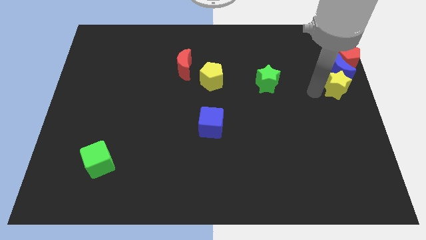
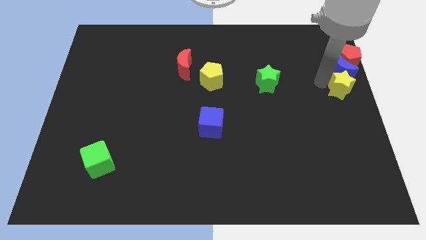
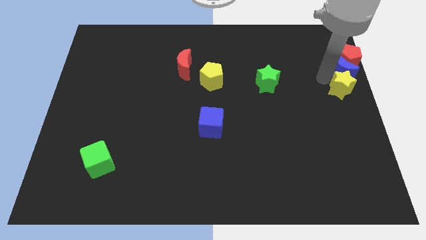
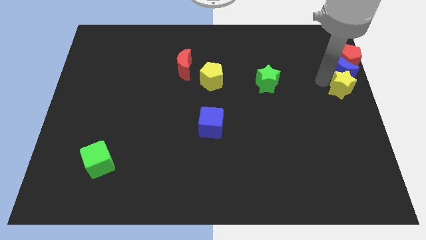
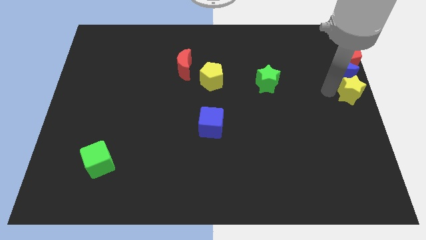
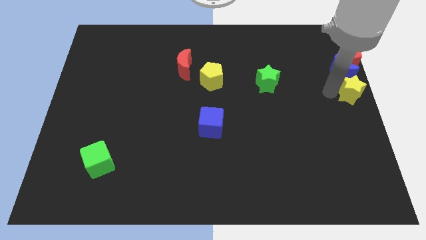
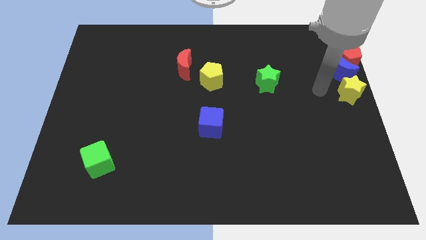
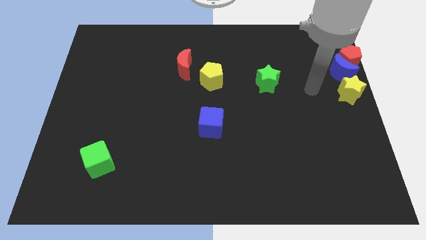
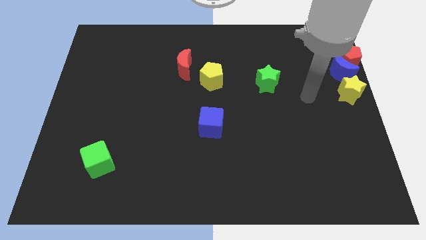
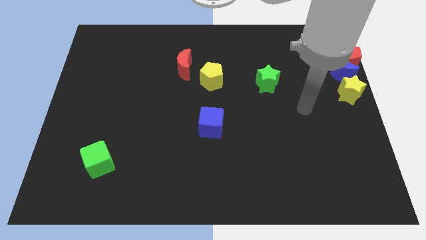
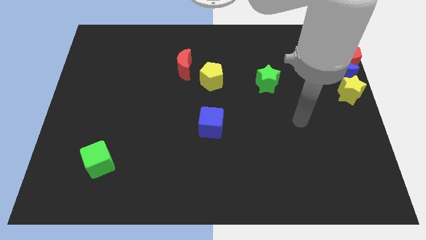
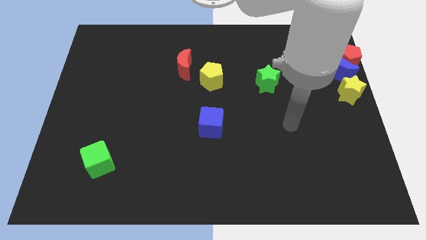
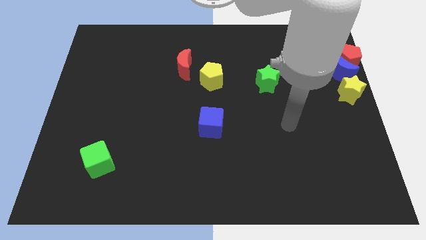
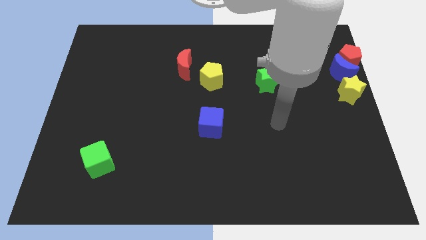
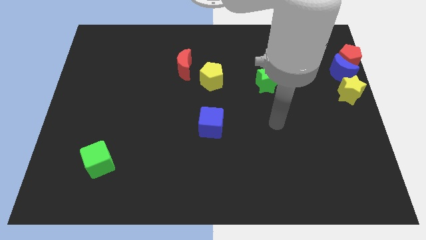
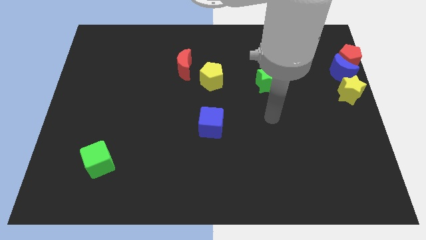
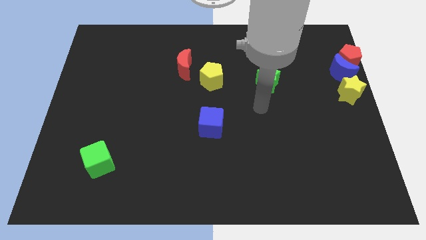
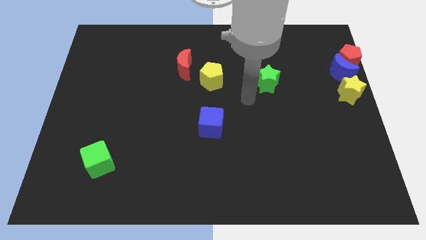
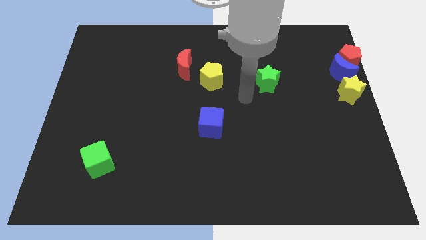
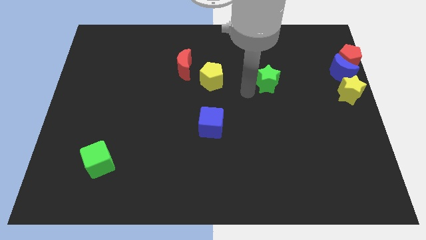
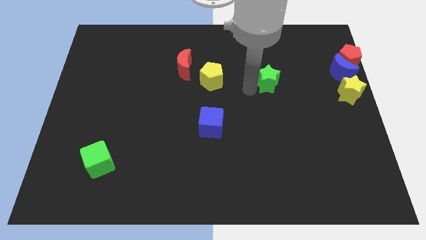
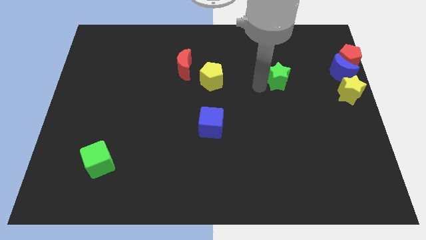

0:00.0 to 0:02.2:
move the arm towards the center side

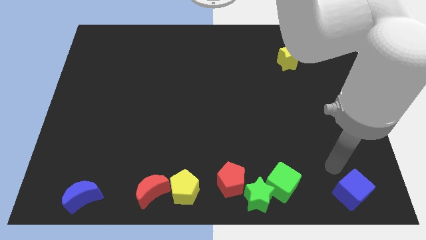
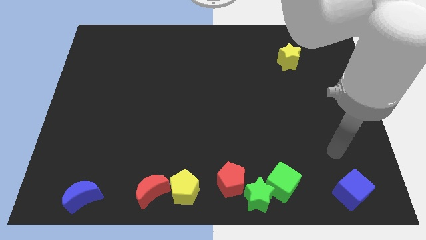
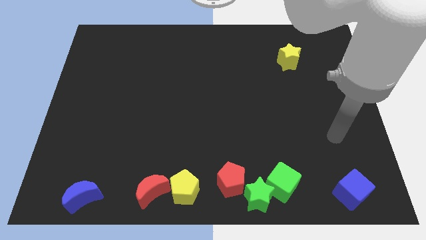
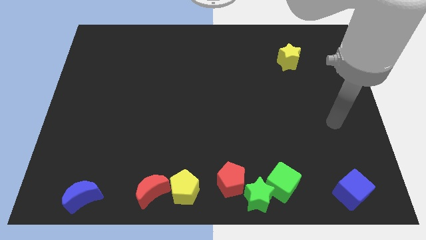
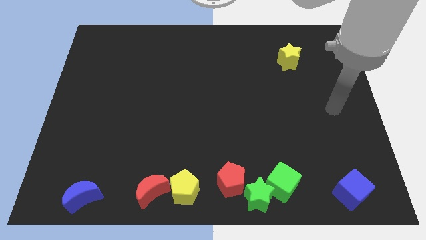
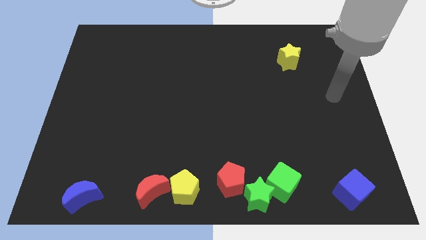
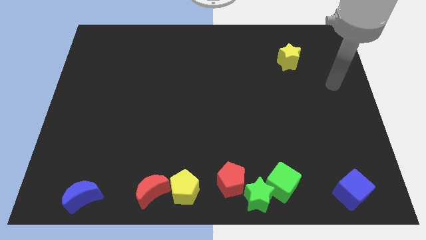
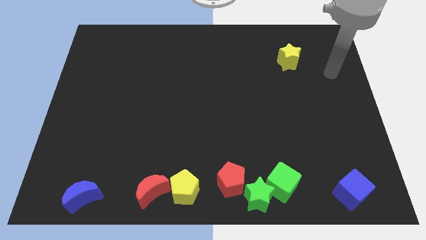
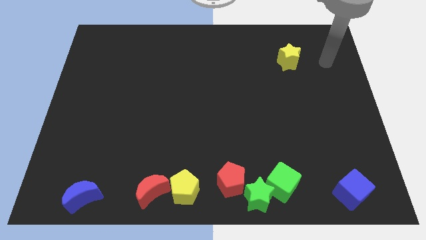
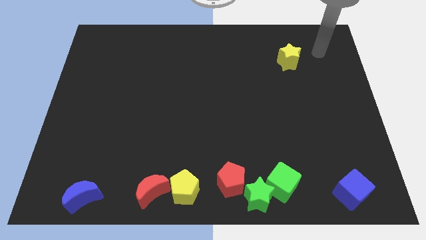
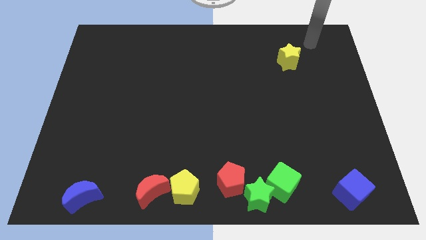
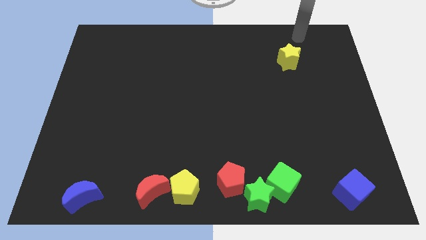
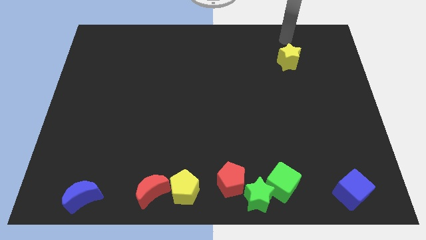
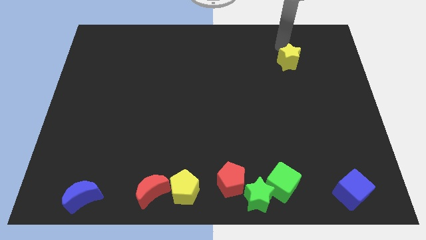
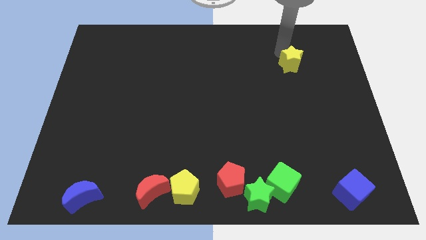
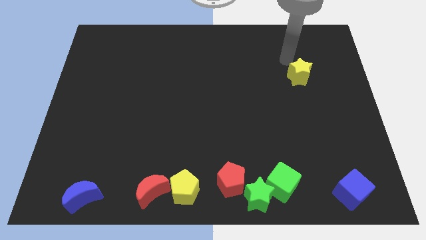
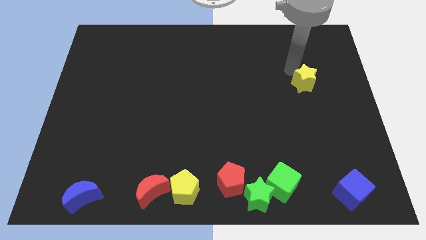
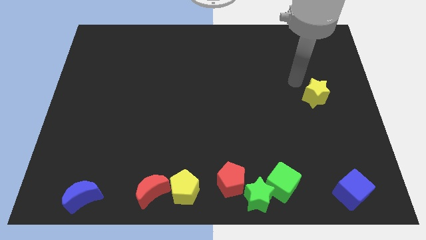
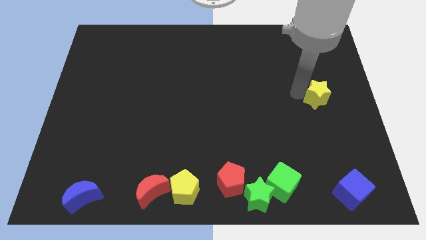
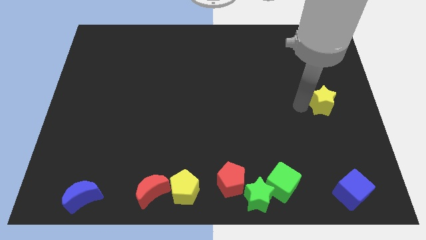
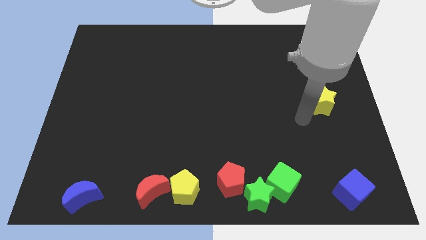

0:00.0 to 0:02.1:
move the yellow star towards down

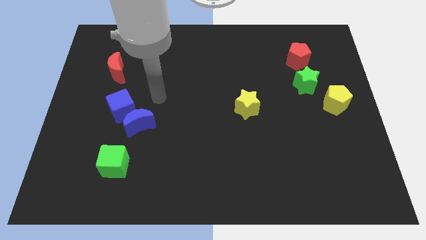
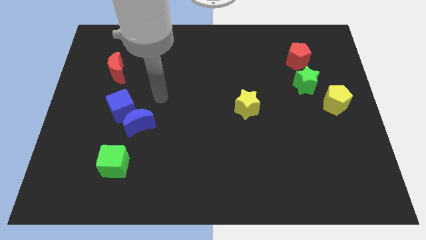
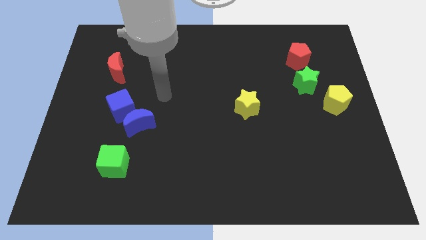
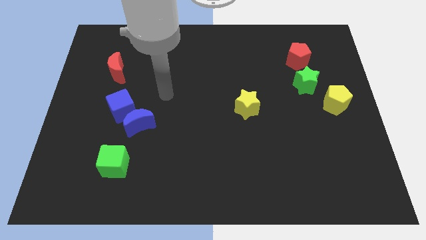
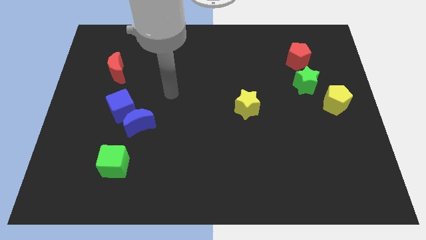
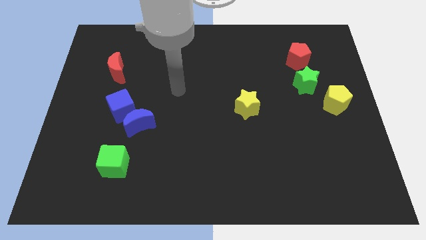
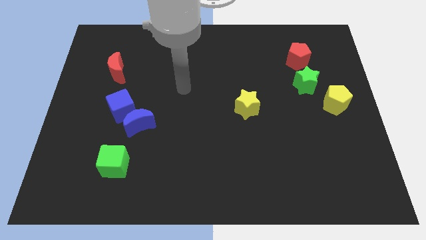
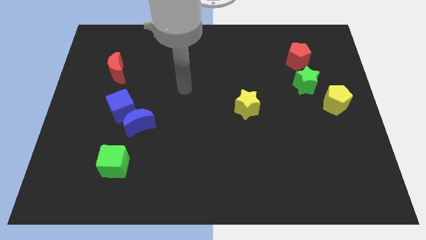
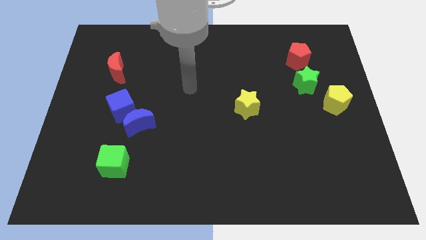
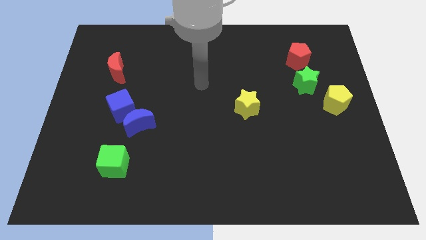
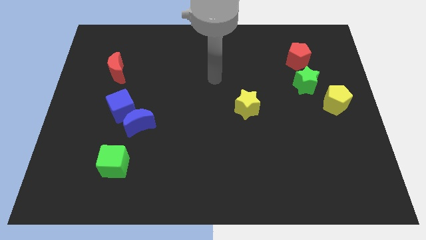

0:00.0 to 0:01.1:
move your arm to the center of the board

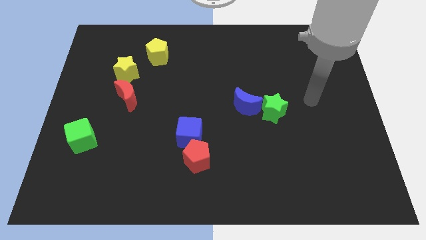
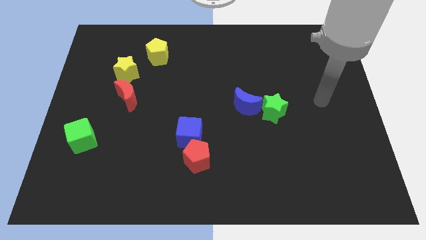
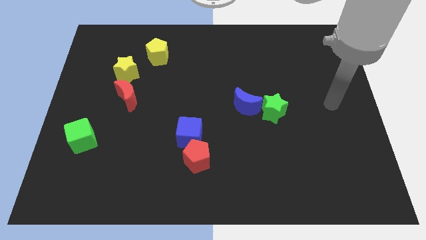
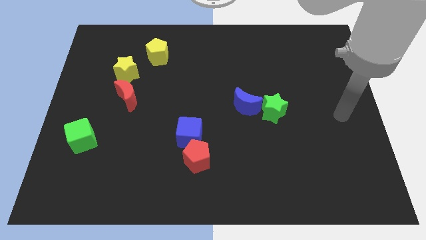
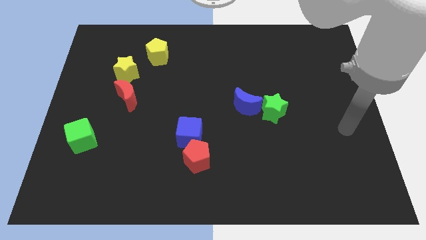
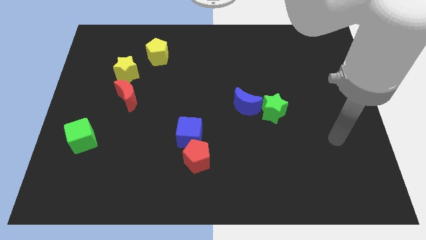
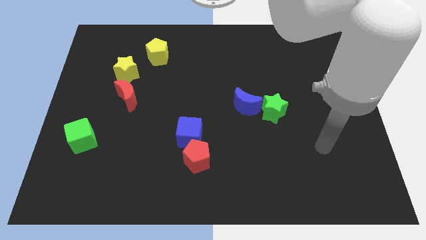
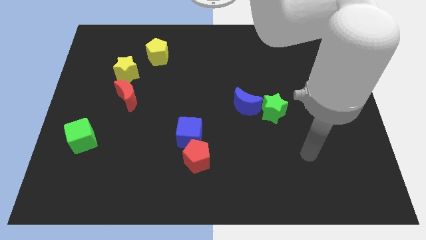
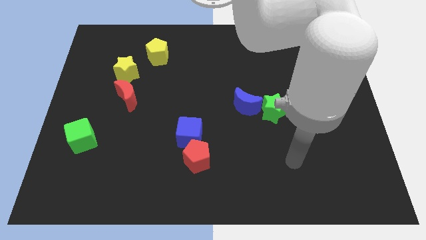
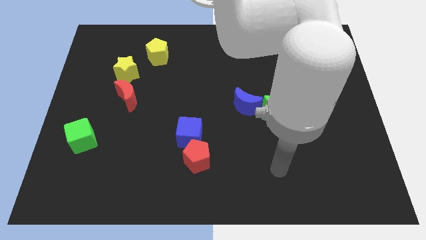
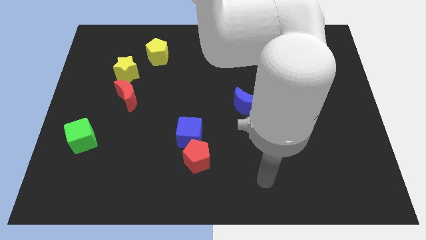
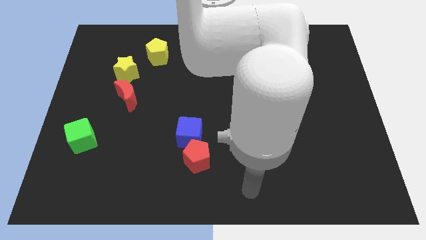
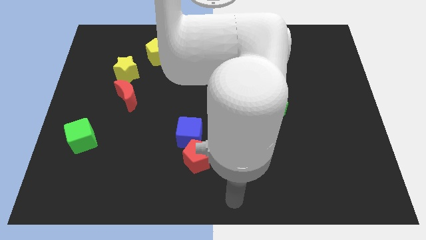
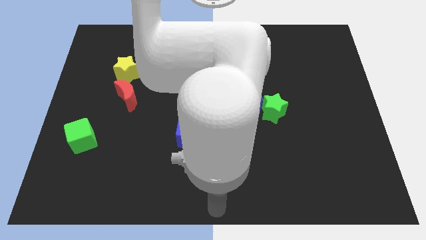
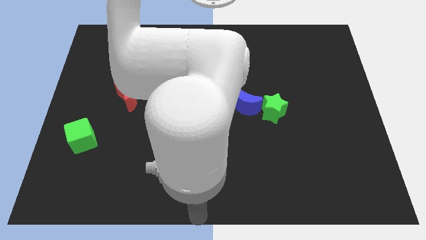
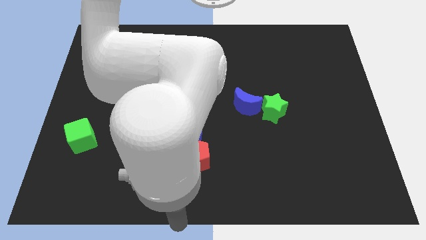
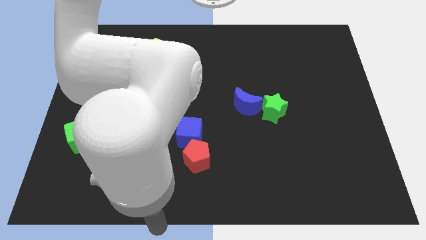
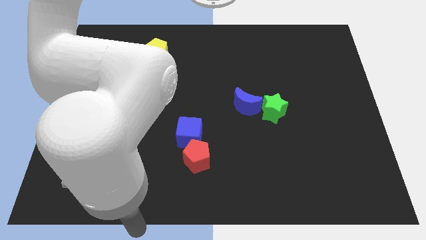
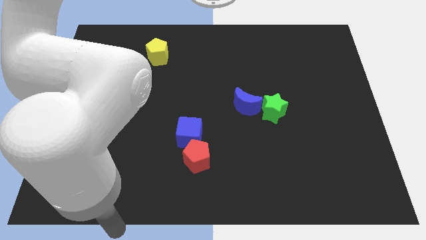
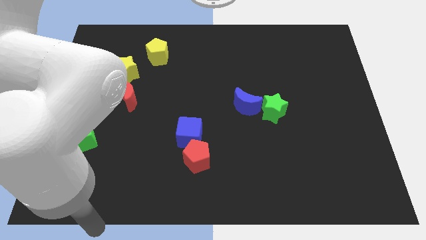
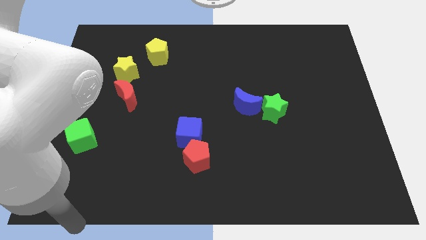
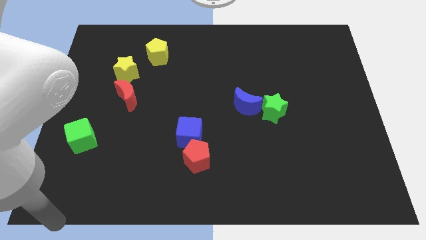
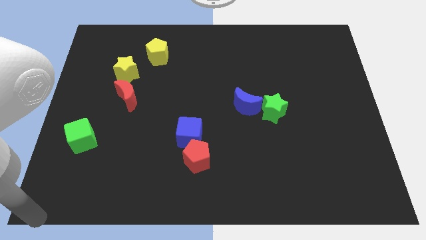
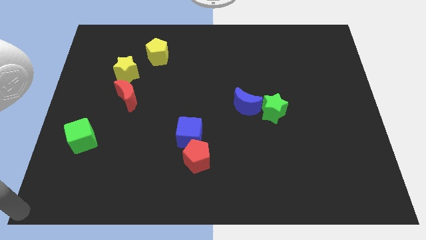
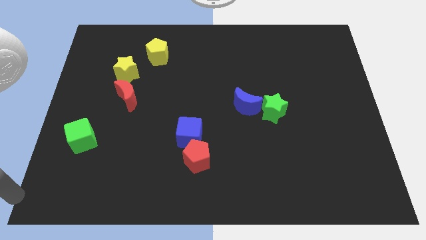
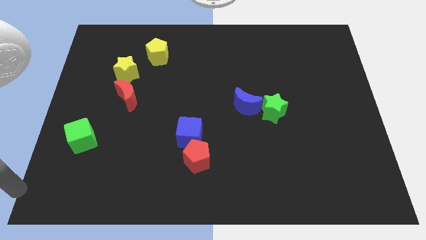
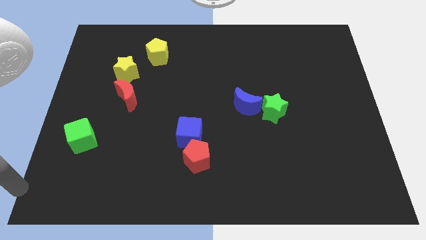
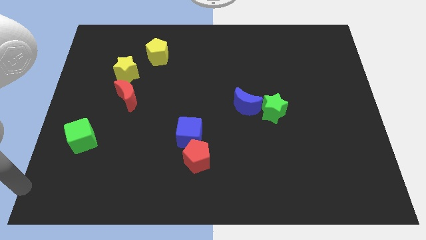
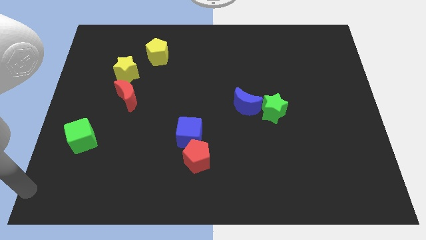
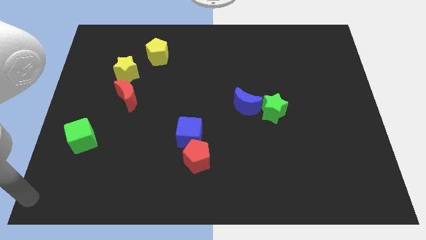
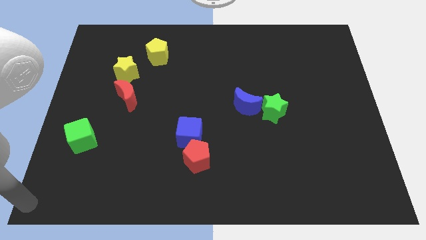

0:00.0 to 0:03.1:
move the arm to the bottom left corner

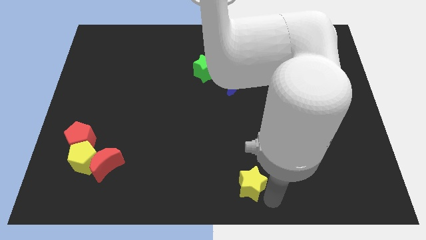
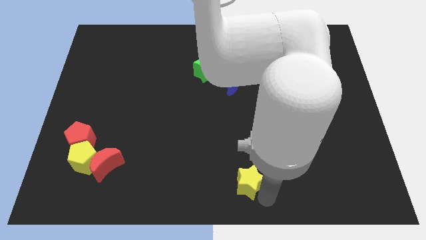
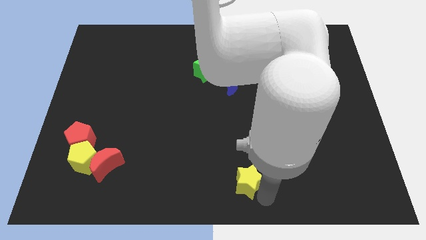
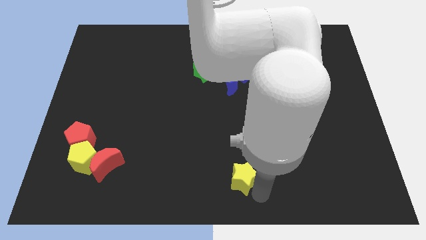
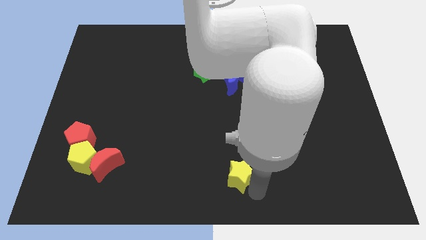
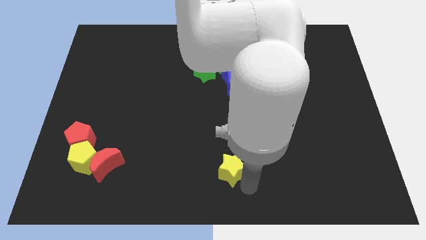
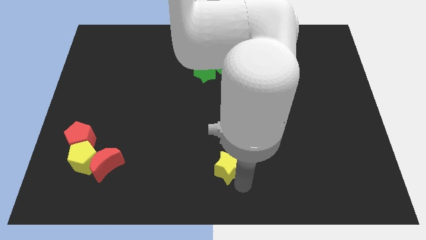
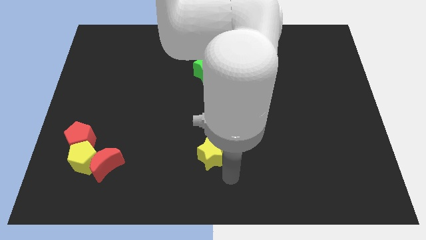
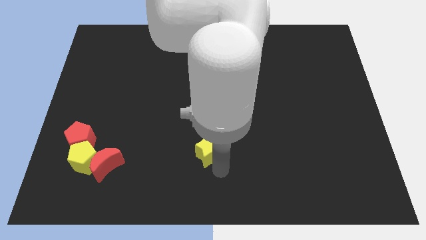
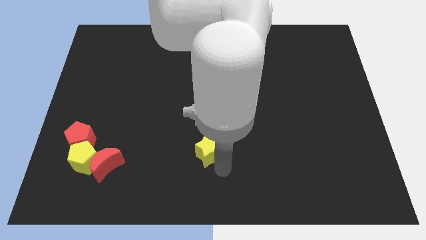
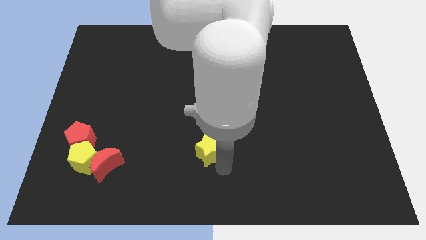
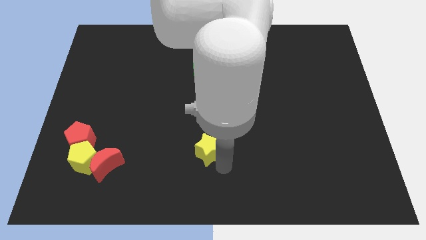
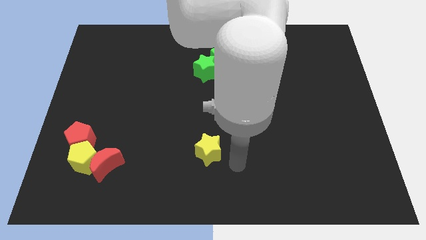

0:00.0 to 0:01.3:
move yellow star to the center
